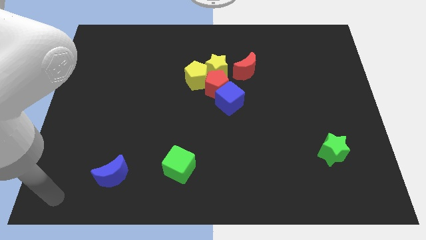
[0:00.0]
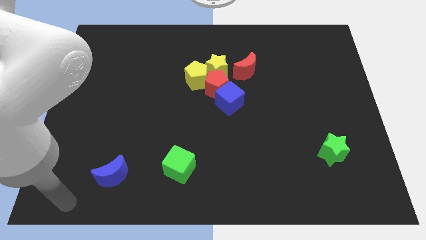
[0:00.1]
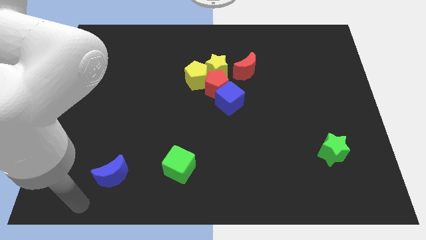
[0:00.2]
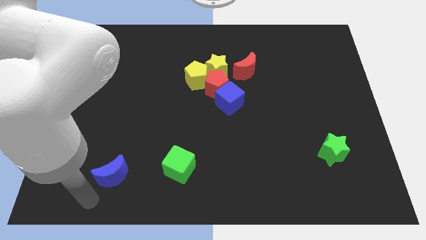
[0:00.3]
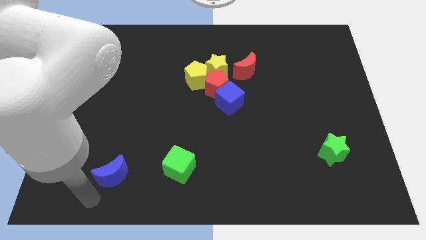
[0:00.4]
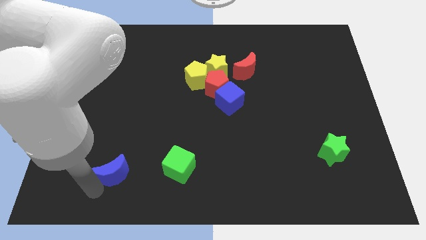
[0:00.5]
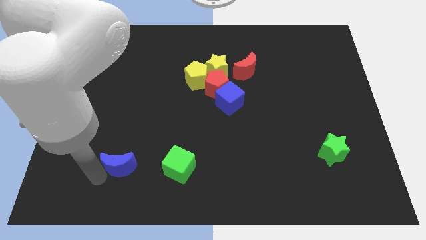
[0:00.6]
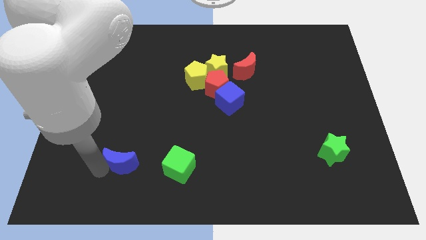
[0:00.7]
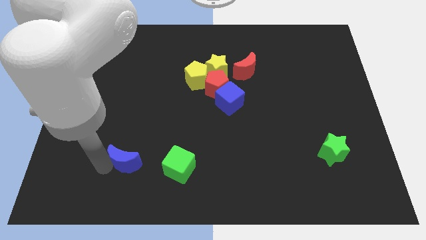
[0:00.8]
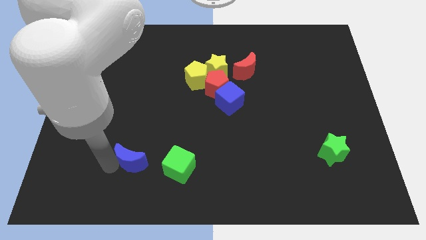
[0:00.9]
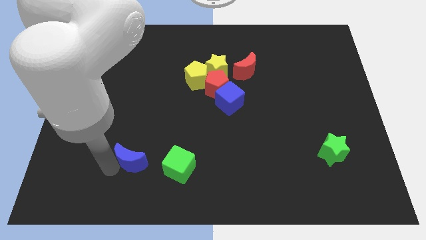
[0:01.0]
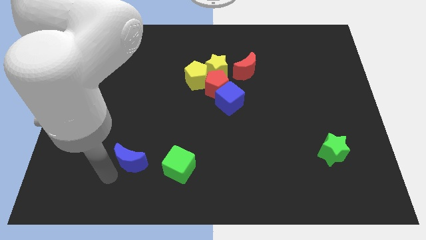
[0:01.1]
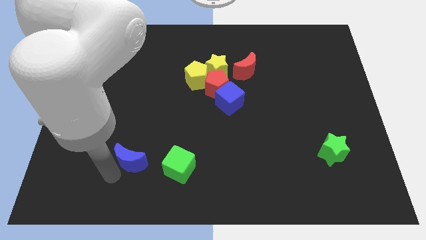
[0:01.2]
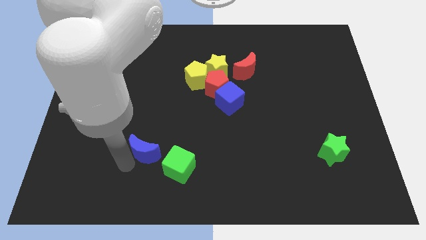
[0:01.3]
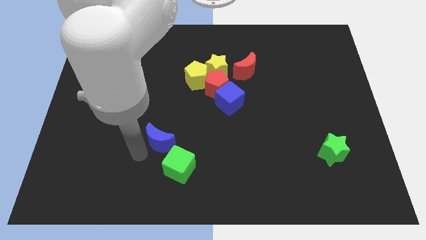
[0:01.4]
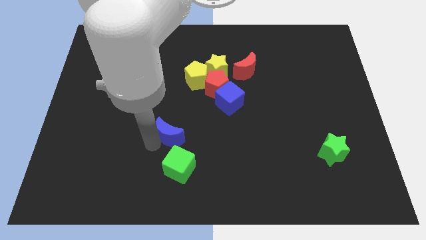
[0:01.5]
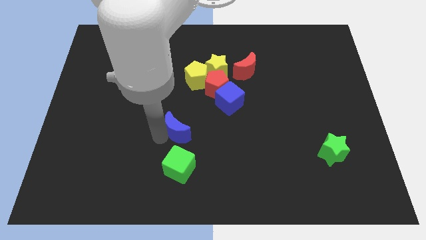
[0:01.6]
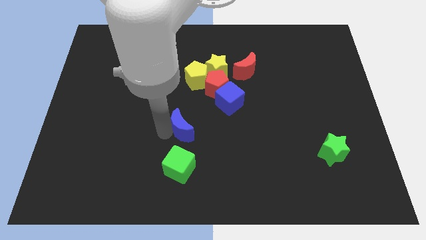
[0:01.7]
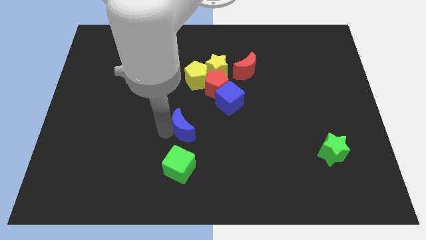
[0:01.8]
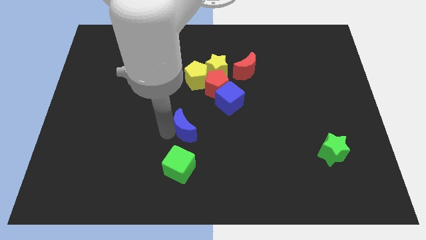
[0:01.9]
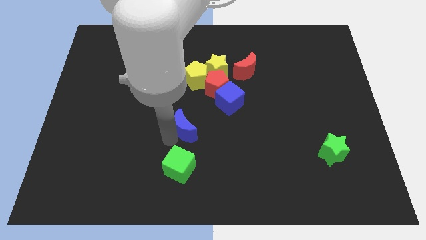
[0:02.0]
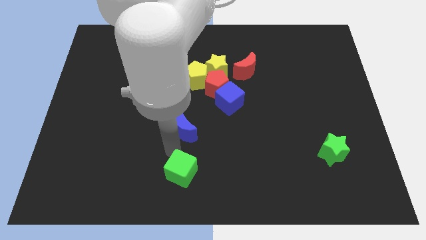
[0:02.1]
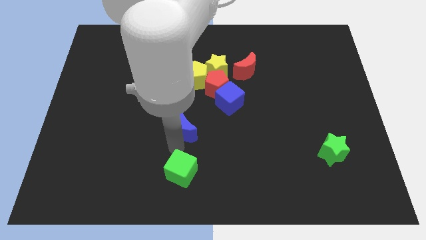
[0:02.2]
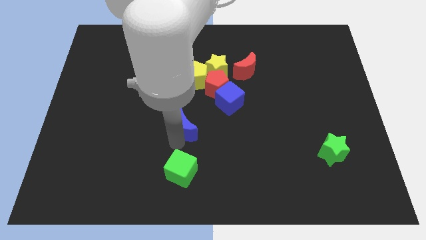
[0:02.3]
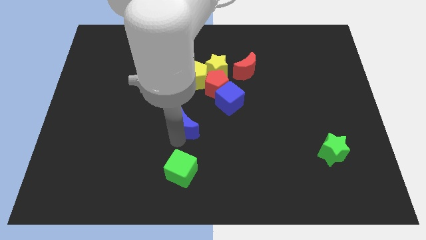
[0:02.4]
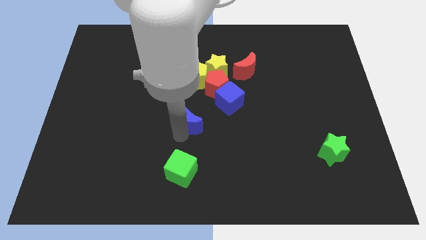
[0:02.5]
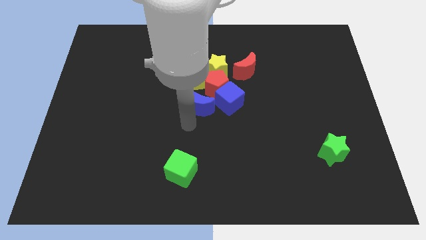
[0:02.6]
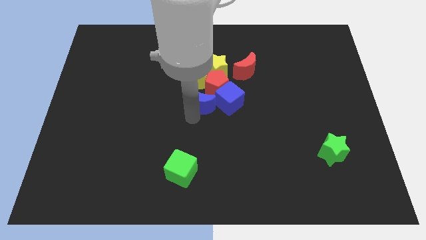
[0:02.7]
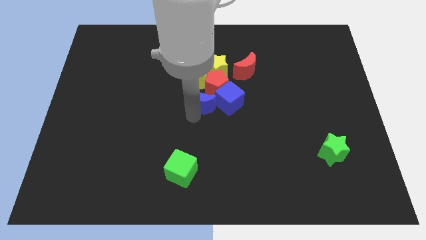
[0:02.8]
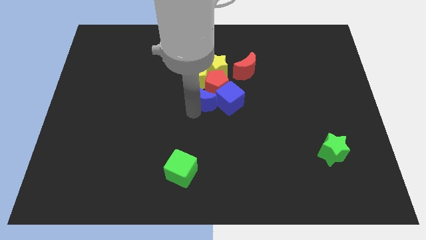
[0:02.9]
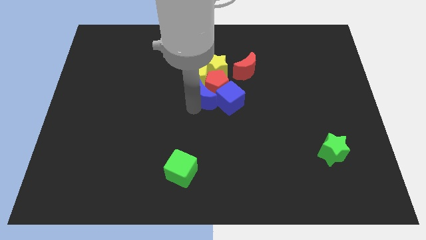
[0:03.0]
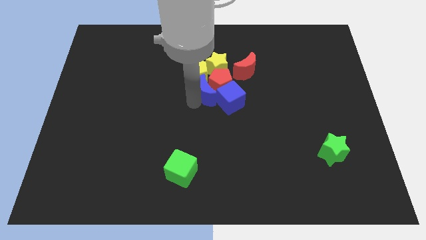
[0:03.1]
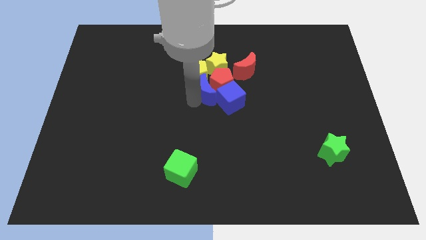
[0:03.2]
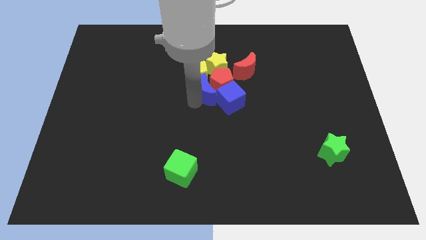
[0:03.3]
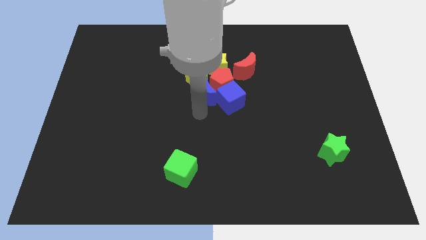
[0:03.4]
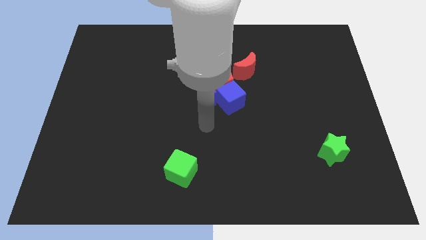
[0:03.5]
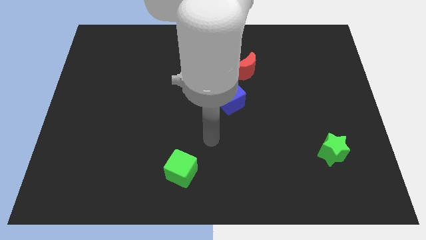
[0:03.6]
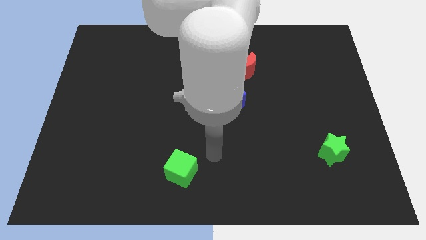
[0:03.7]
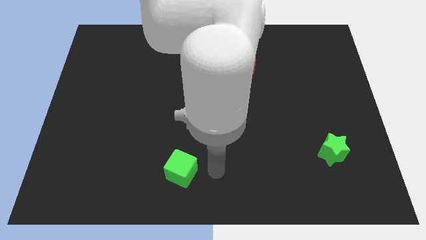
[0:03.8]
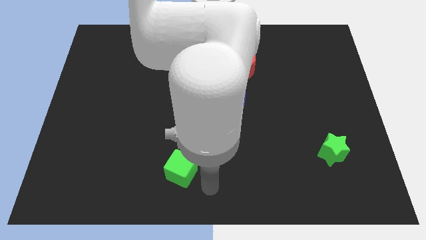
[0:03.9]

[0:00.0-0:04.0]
move the blue crescent into the red pentagon

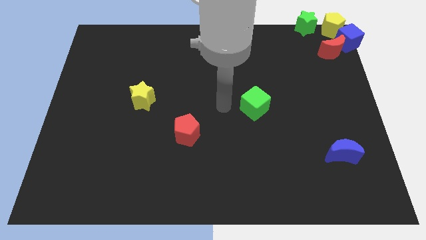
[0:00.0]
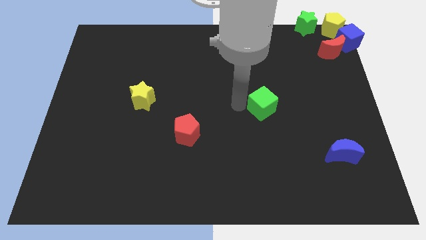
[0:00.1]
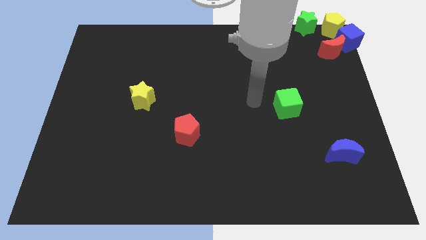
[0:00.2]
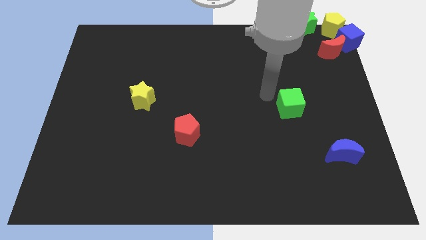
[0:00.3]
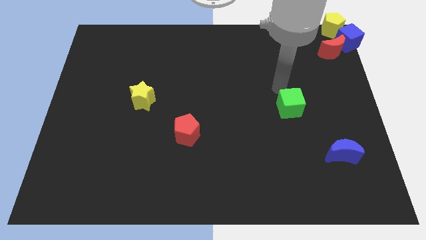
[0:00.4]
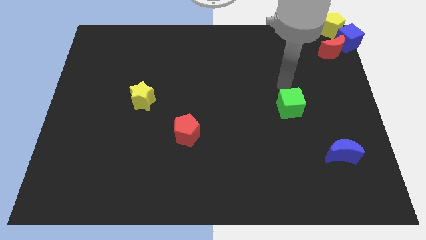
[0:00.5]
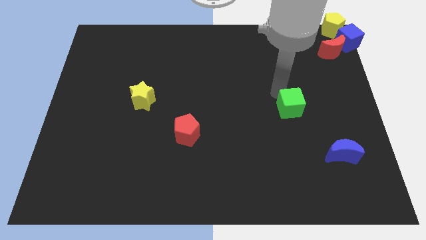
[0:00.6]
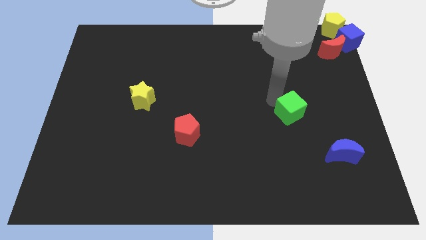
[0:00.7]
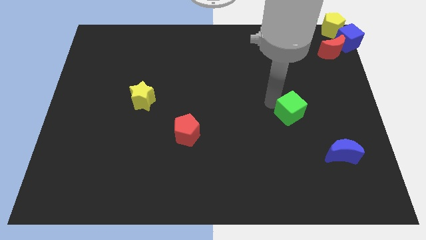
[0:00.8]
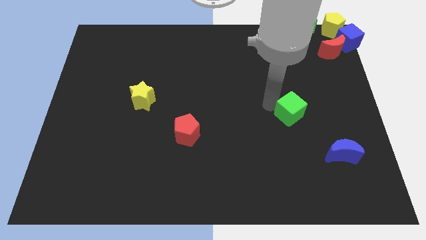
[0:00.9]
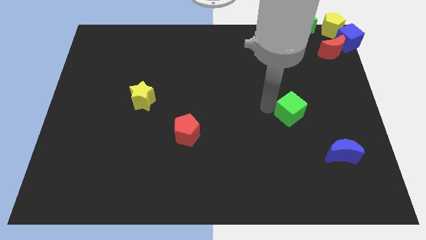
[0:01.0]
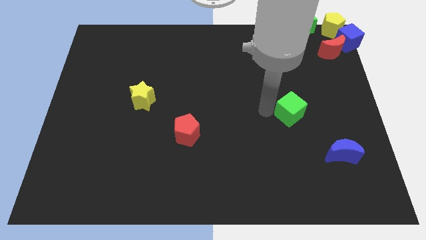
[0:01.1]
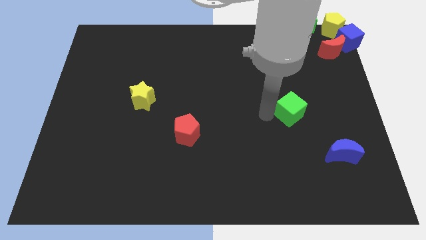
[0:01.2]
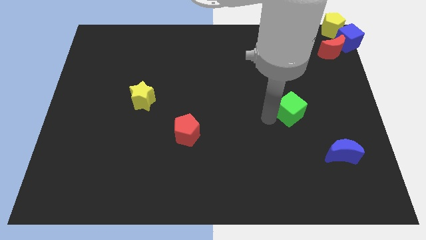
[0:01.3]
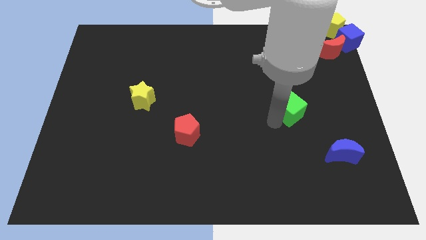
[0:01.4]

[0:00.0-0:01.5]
push the green cube slightly to the right

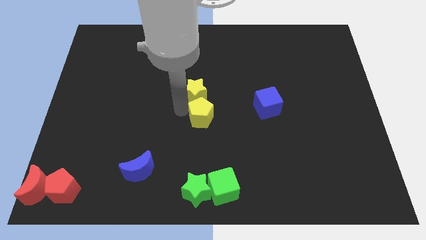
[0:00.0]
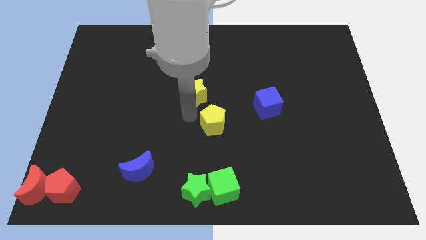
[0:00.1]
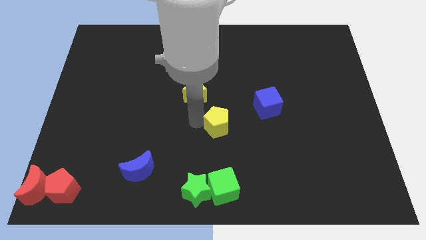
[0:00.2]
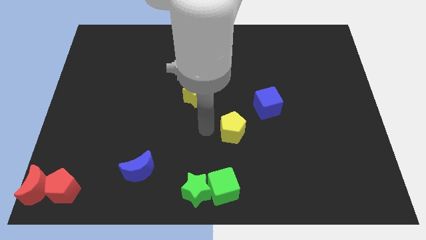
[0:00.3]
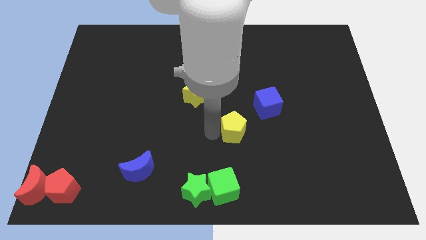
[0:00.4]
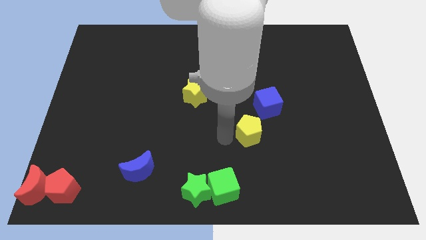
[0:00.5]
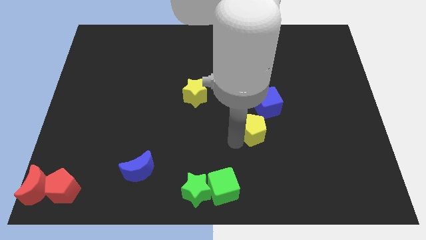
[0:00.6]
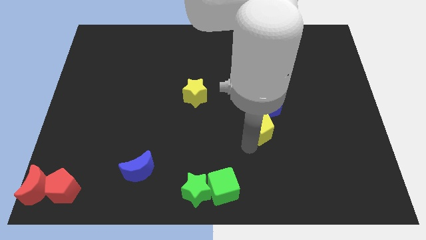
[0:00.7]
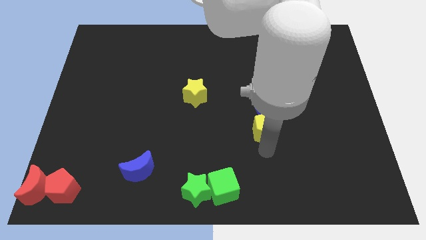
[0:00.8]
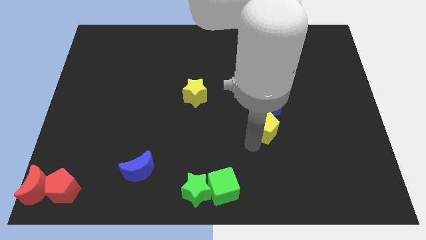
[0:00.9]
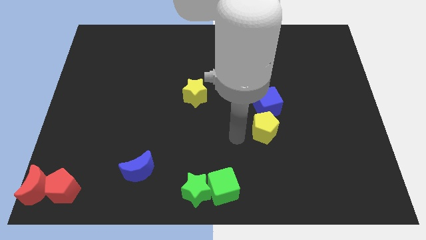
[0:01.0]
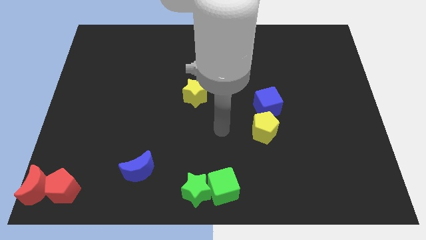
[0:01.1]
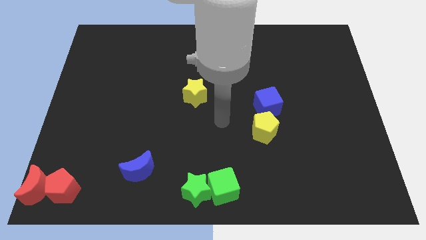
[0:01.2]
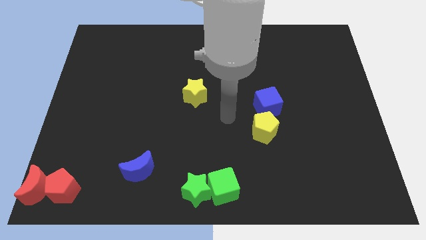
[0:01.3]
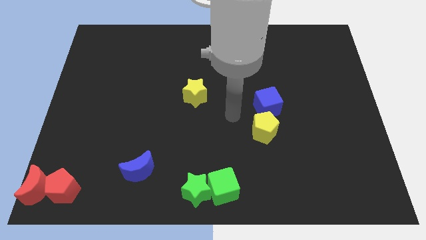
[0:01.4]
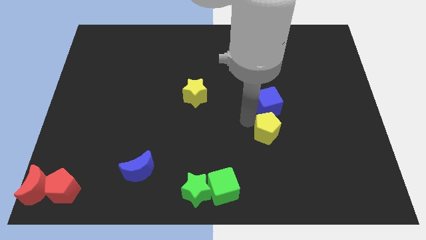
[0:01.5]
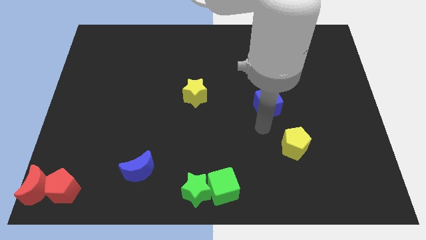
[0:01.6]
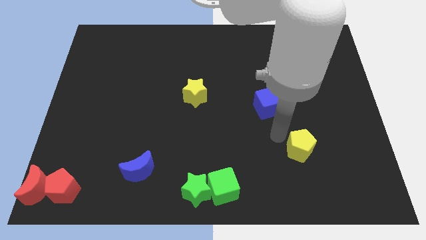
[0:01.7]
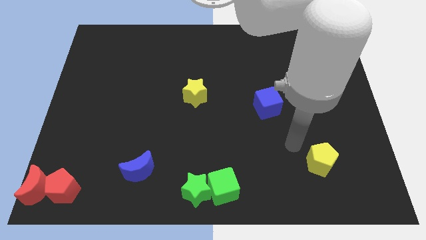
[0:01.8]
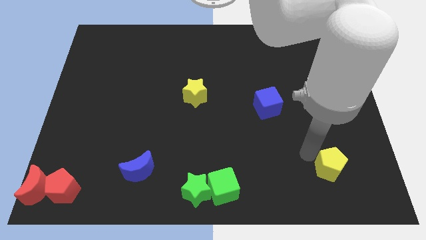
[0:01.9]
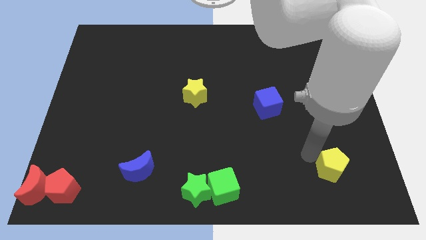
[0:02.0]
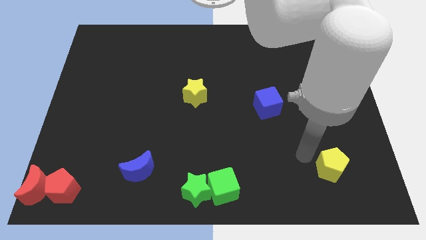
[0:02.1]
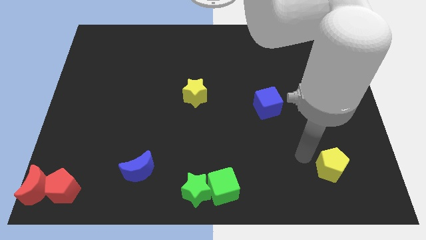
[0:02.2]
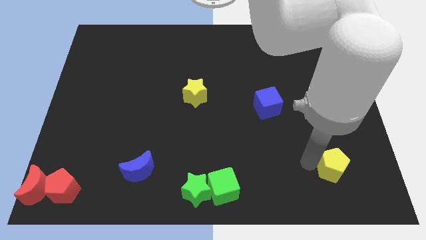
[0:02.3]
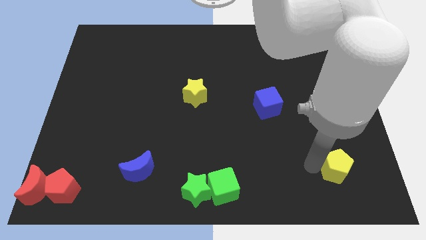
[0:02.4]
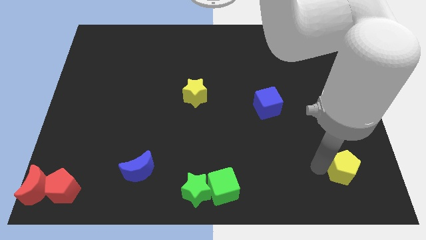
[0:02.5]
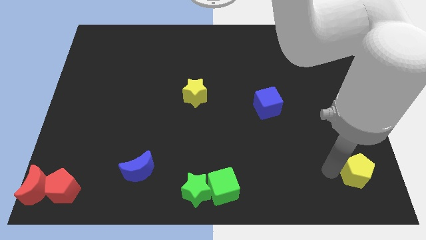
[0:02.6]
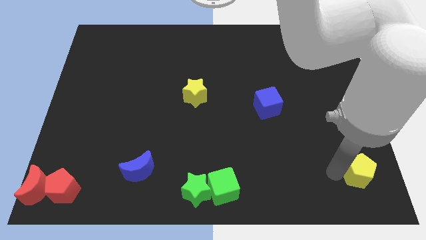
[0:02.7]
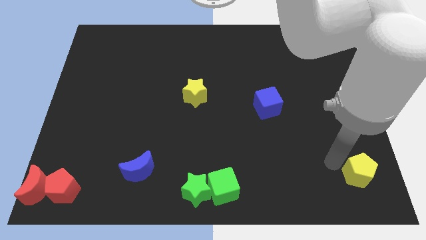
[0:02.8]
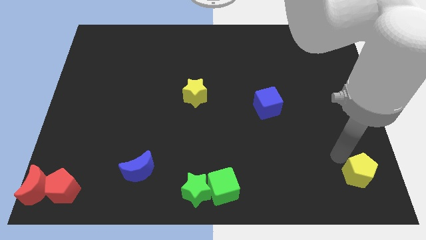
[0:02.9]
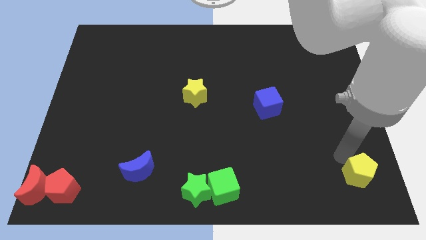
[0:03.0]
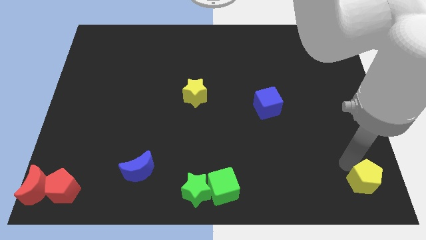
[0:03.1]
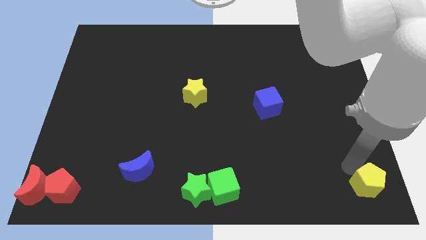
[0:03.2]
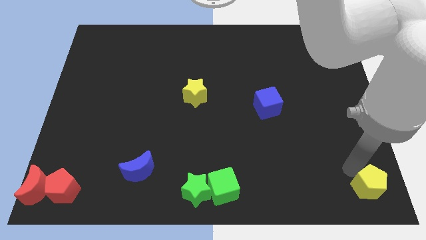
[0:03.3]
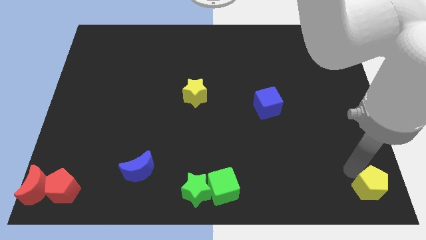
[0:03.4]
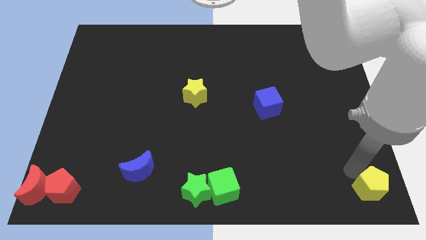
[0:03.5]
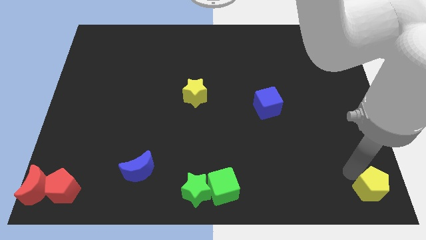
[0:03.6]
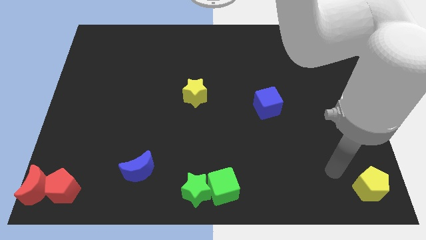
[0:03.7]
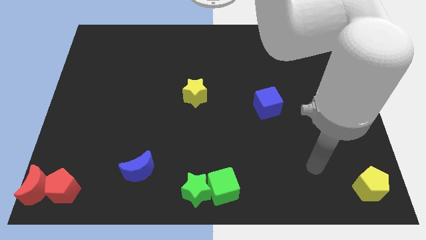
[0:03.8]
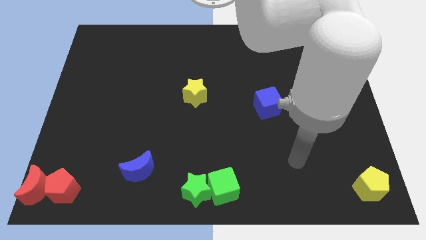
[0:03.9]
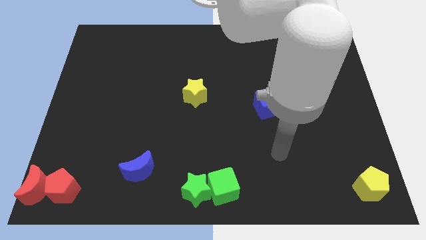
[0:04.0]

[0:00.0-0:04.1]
place the yellow pentagon to the bottom right
